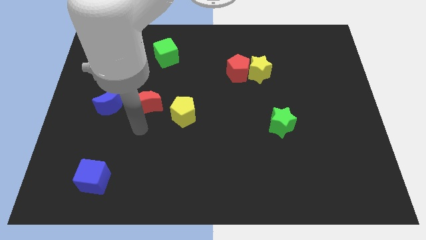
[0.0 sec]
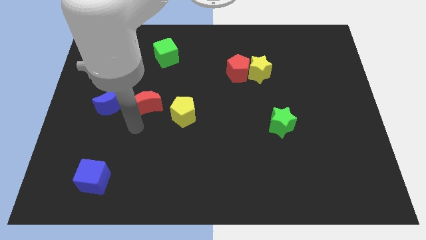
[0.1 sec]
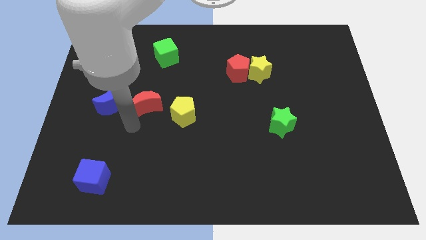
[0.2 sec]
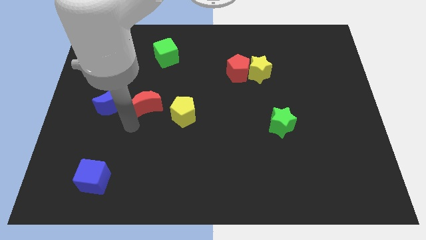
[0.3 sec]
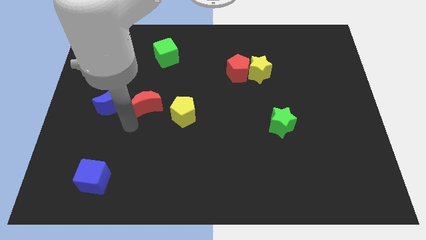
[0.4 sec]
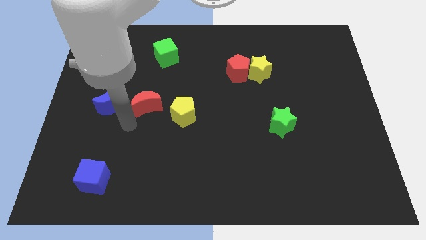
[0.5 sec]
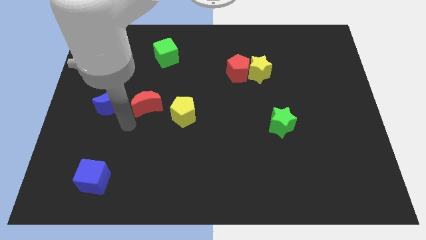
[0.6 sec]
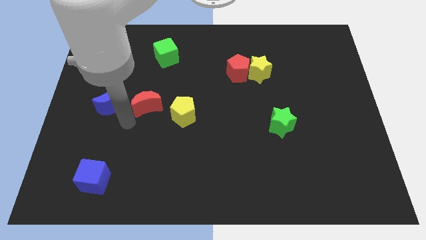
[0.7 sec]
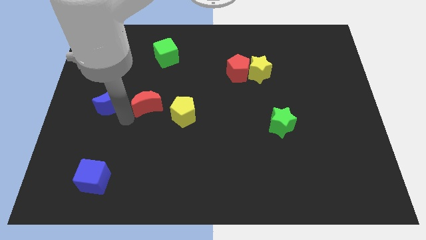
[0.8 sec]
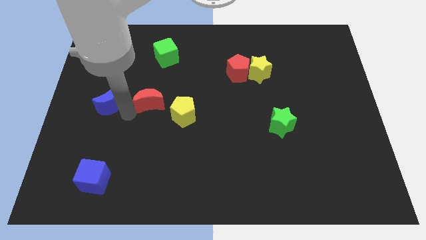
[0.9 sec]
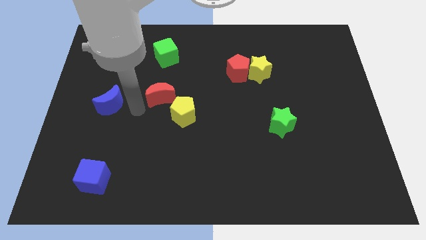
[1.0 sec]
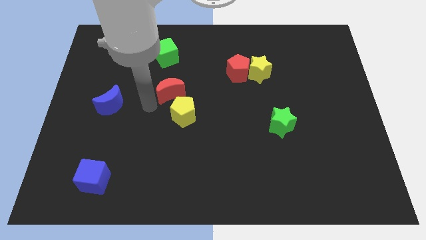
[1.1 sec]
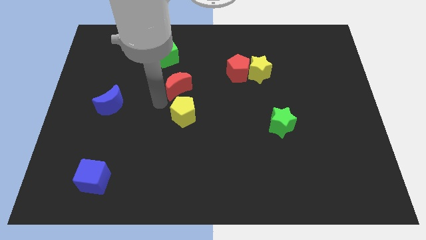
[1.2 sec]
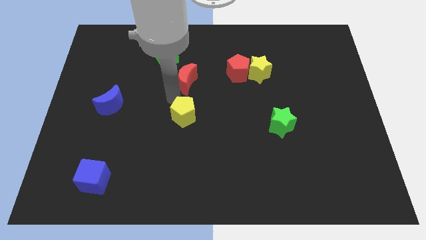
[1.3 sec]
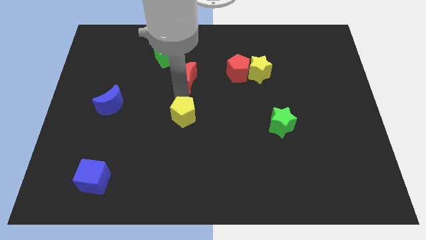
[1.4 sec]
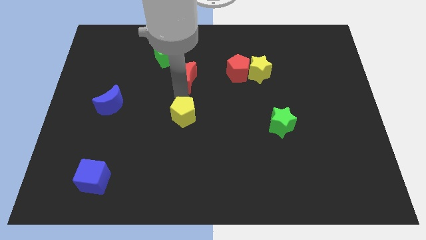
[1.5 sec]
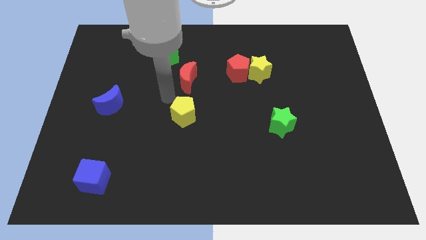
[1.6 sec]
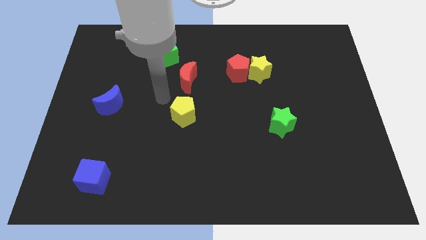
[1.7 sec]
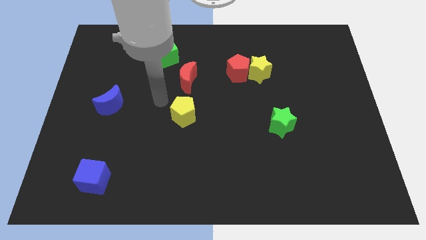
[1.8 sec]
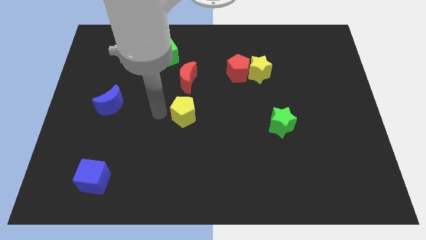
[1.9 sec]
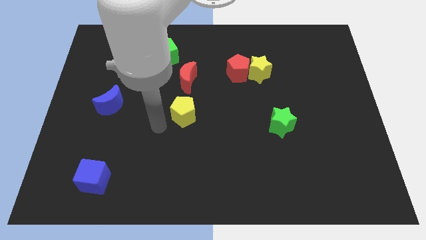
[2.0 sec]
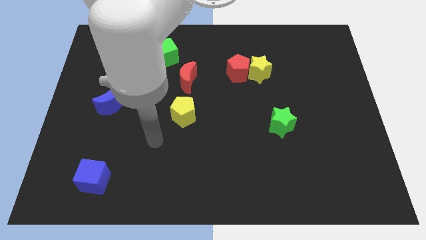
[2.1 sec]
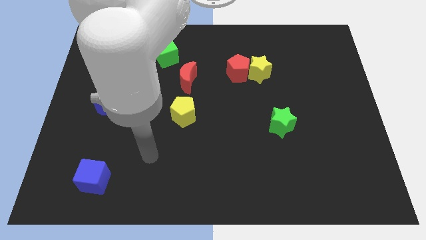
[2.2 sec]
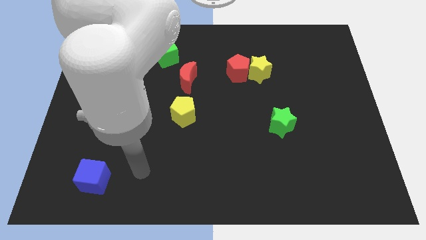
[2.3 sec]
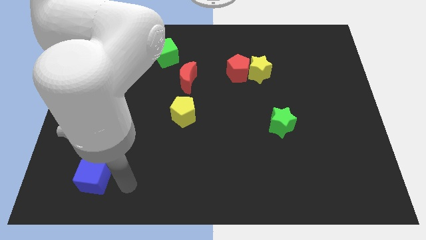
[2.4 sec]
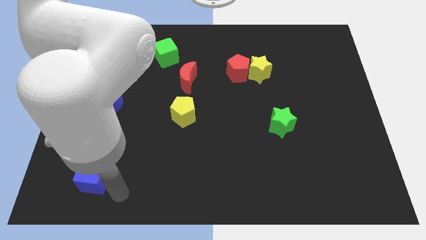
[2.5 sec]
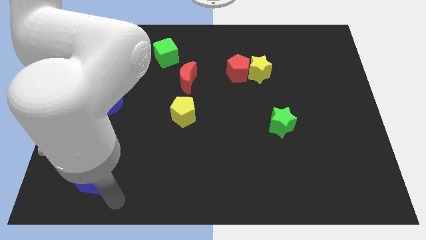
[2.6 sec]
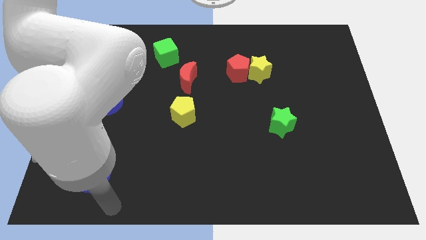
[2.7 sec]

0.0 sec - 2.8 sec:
push the red crescent

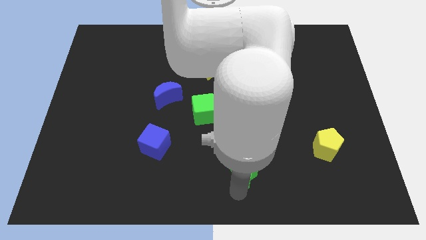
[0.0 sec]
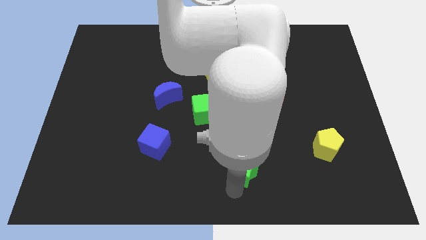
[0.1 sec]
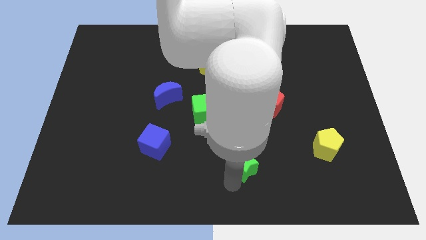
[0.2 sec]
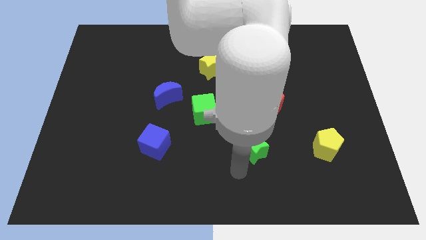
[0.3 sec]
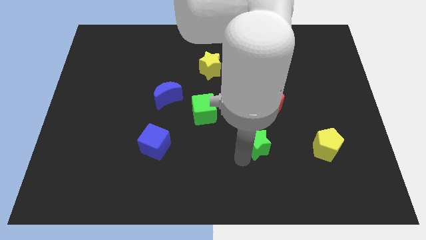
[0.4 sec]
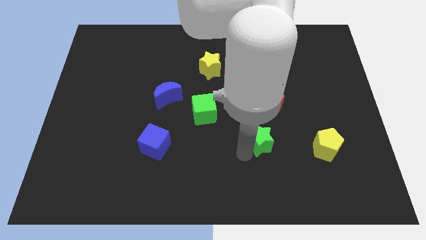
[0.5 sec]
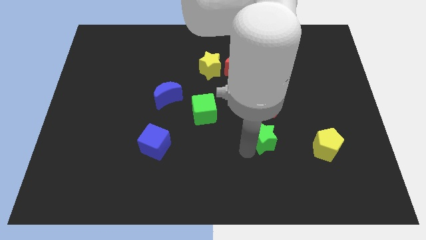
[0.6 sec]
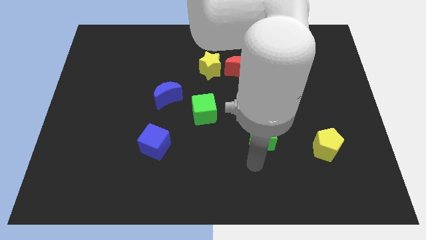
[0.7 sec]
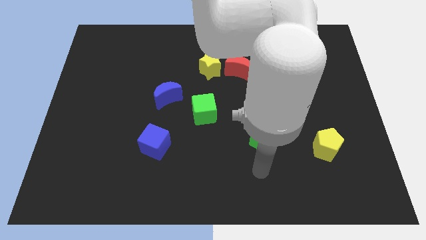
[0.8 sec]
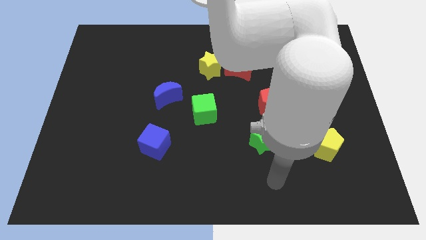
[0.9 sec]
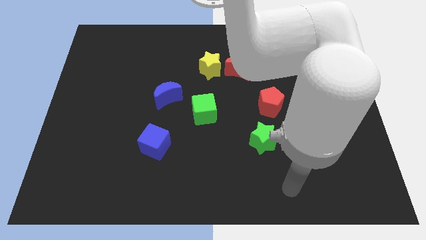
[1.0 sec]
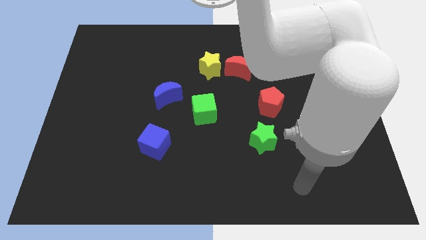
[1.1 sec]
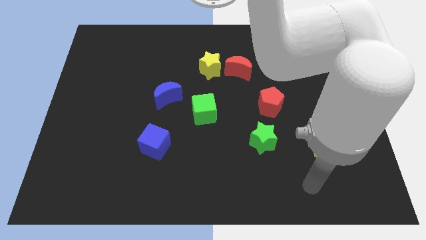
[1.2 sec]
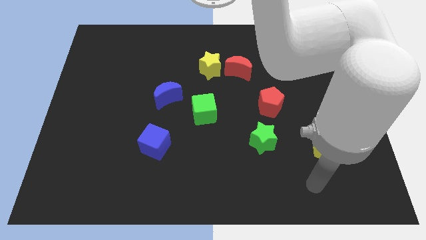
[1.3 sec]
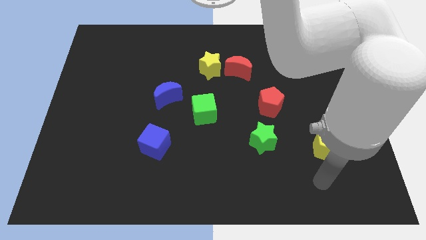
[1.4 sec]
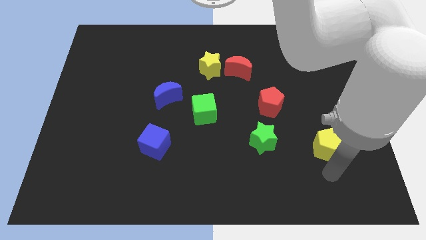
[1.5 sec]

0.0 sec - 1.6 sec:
place your hand below the yellow pentagon

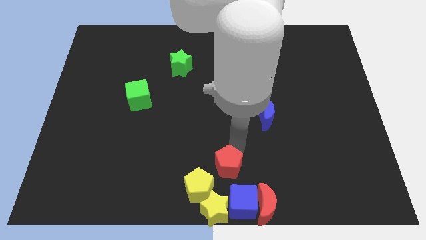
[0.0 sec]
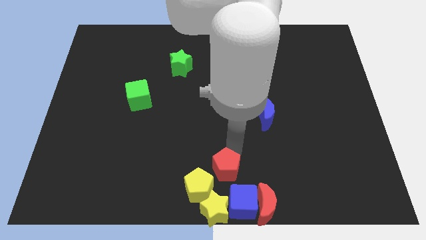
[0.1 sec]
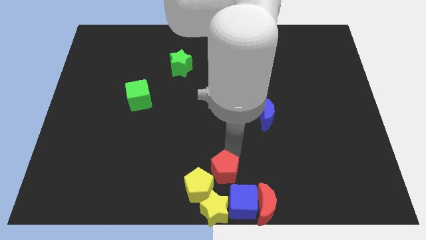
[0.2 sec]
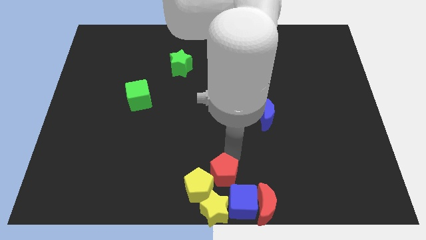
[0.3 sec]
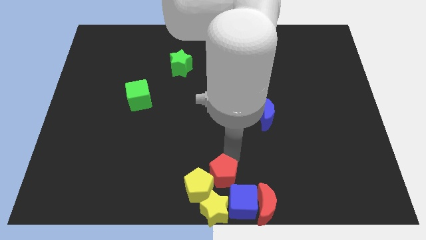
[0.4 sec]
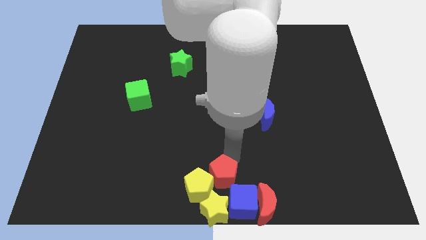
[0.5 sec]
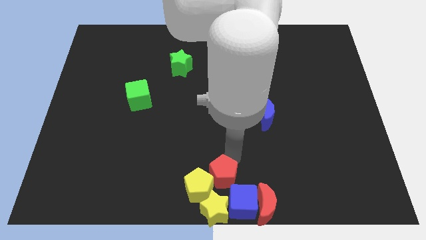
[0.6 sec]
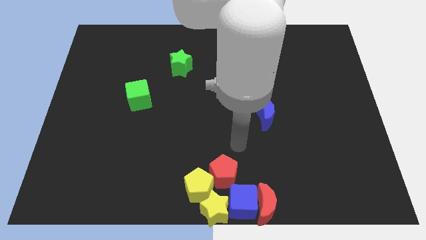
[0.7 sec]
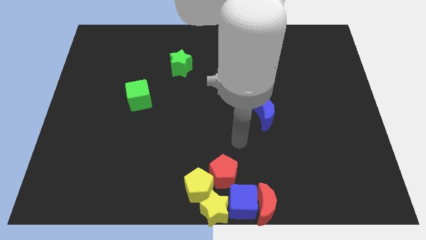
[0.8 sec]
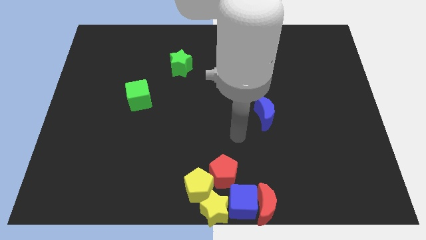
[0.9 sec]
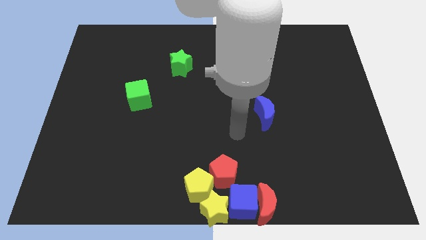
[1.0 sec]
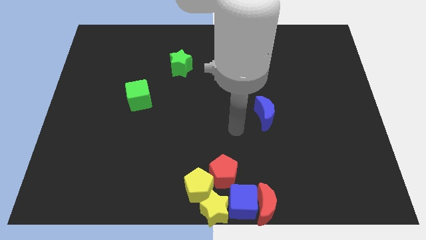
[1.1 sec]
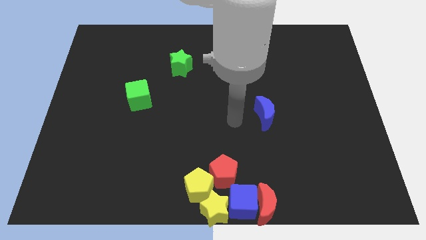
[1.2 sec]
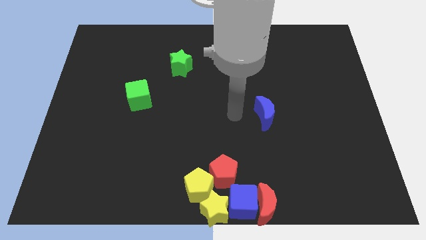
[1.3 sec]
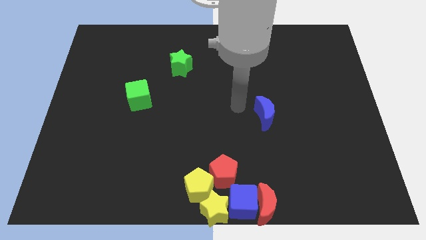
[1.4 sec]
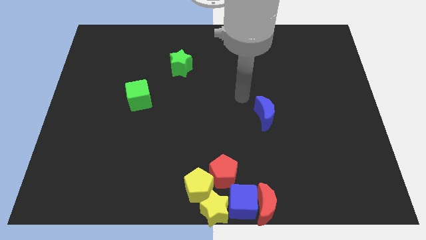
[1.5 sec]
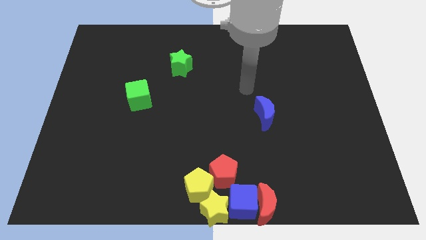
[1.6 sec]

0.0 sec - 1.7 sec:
place your arm at the top of blue moon

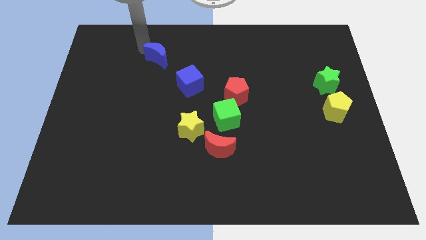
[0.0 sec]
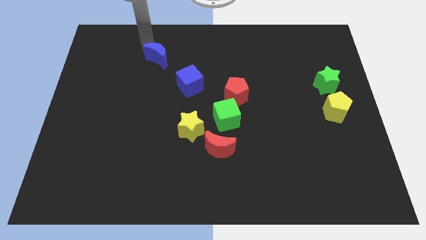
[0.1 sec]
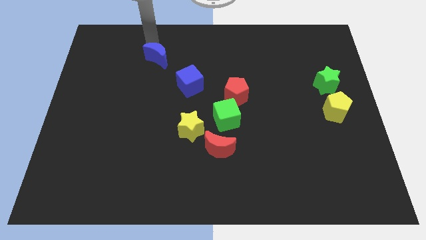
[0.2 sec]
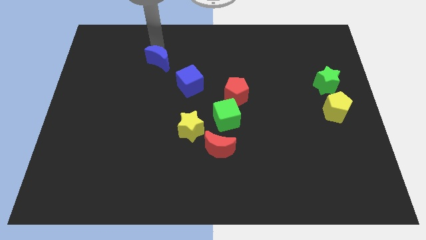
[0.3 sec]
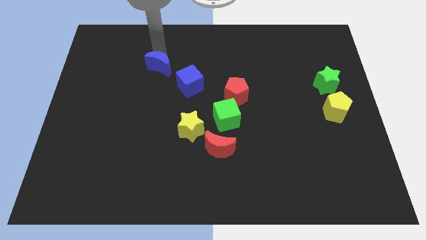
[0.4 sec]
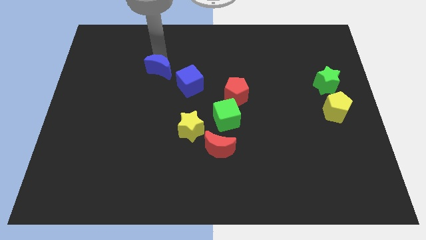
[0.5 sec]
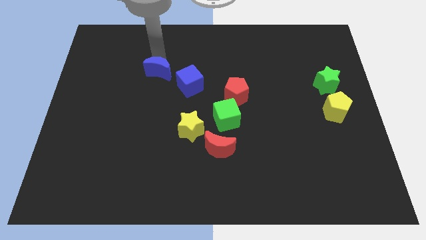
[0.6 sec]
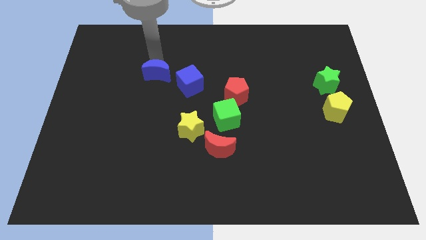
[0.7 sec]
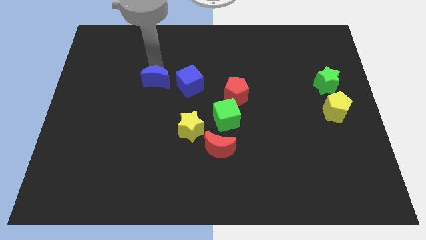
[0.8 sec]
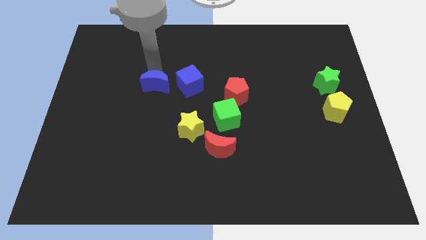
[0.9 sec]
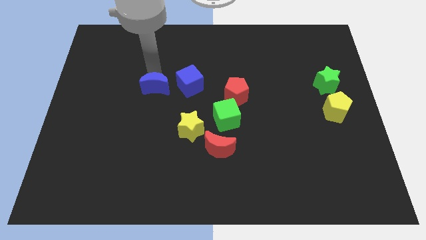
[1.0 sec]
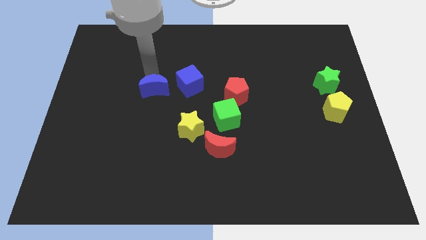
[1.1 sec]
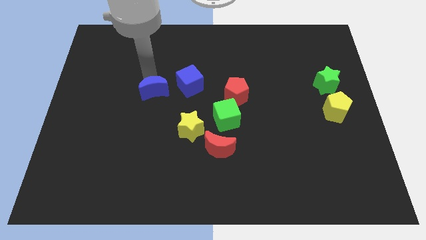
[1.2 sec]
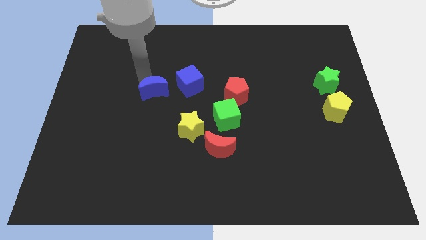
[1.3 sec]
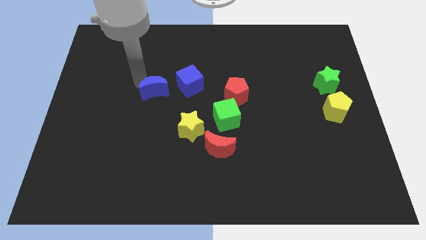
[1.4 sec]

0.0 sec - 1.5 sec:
move the blue moon to the left of the blue cube

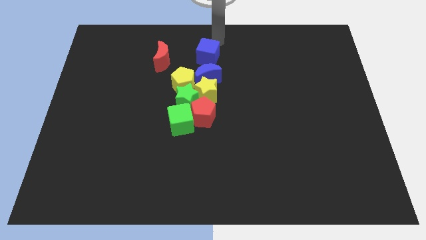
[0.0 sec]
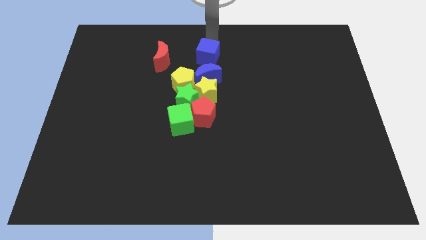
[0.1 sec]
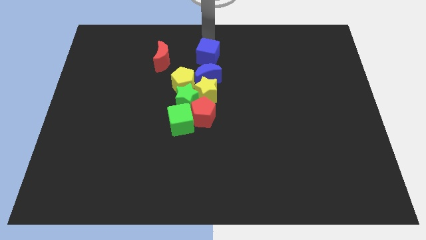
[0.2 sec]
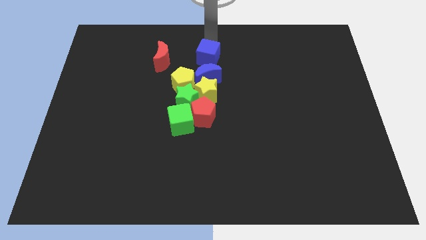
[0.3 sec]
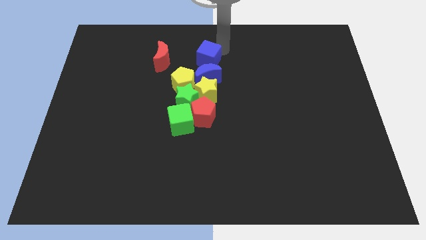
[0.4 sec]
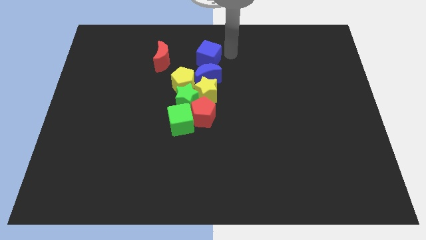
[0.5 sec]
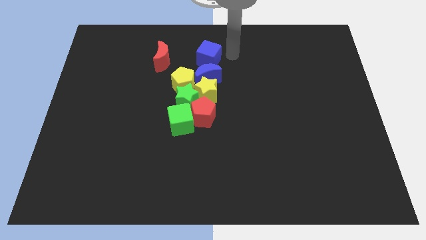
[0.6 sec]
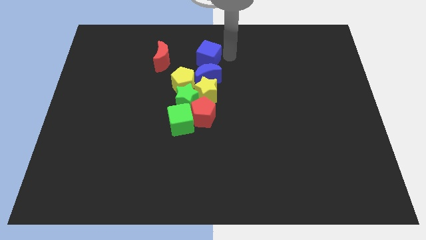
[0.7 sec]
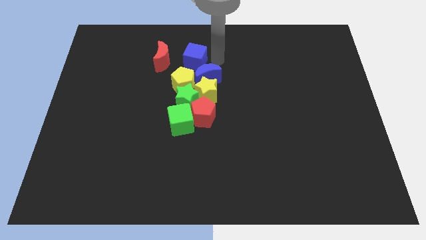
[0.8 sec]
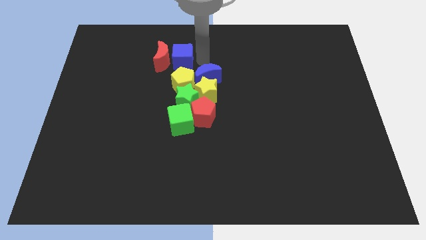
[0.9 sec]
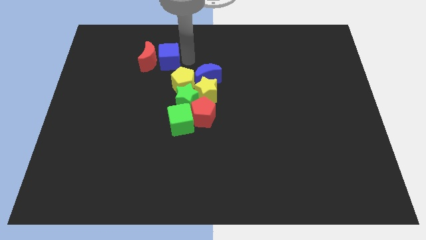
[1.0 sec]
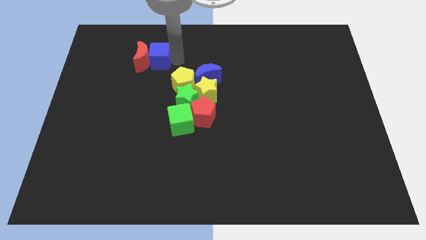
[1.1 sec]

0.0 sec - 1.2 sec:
push the blue cube into the red moon

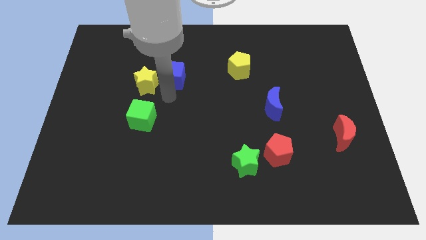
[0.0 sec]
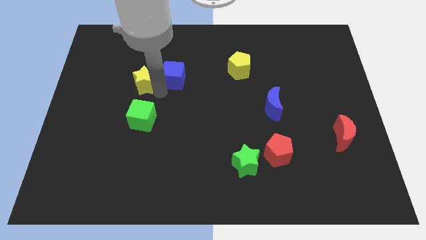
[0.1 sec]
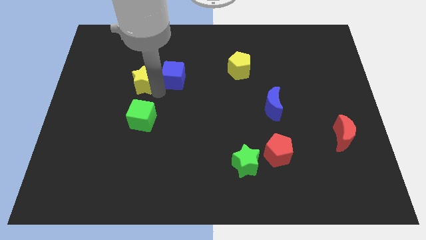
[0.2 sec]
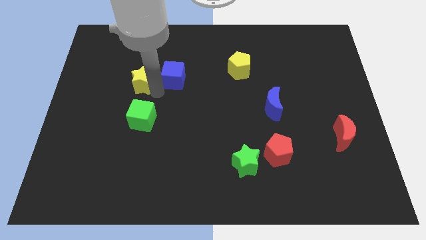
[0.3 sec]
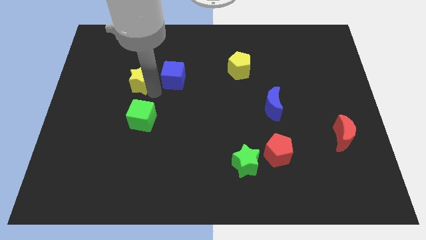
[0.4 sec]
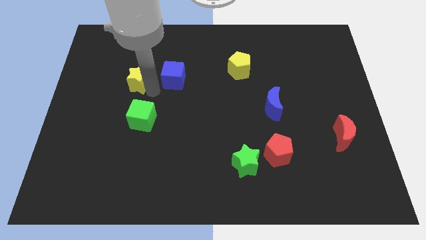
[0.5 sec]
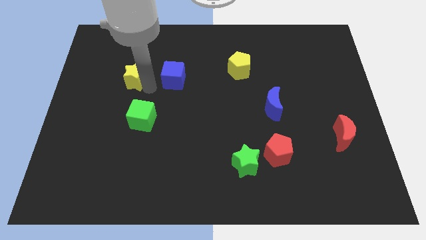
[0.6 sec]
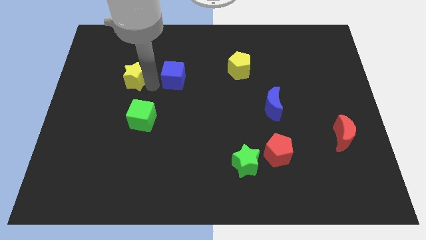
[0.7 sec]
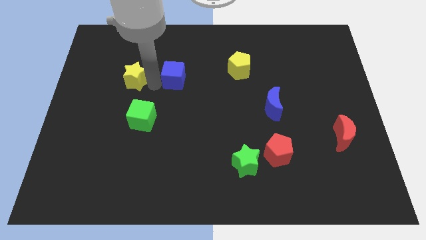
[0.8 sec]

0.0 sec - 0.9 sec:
push the yellow star sway form the green and blue cube
